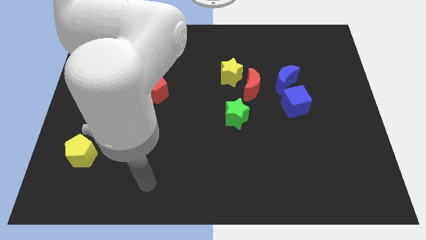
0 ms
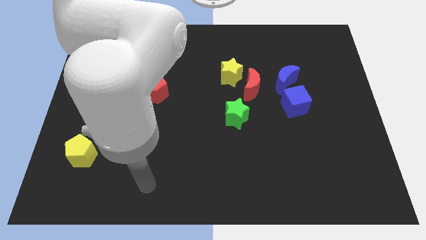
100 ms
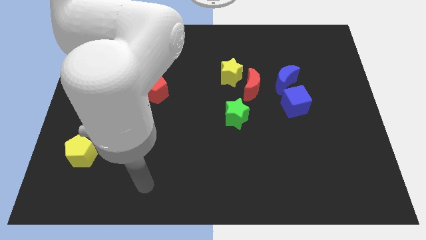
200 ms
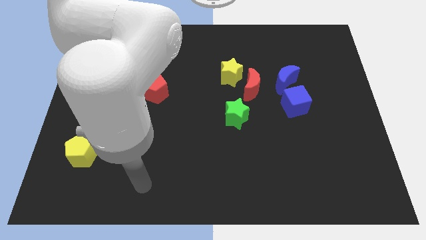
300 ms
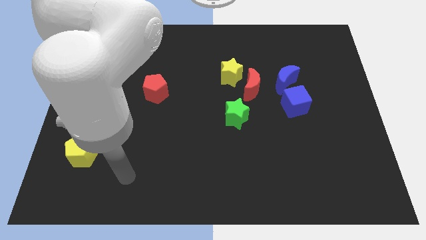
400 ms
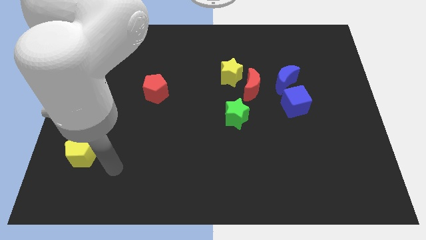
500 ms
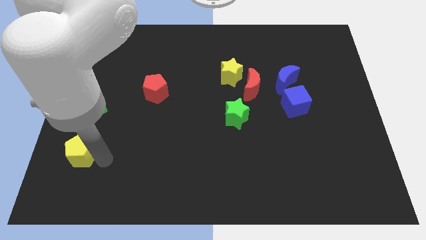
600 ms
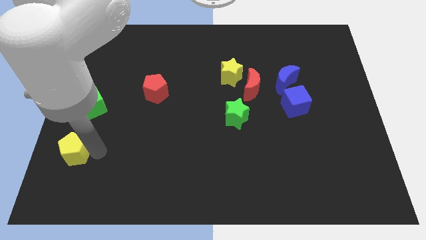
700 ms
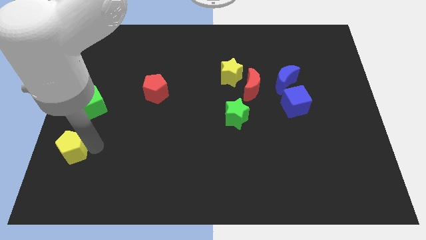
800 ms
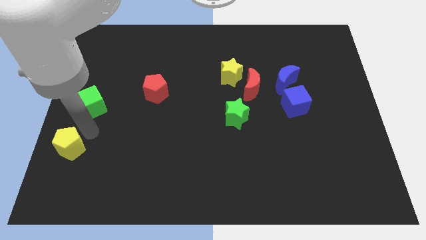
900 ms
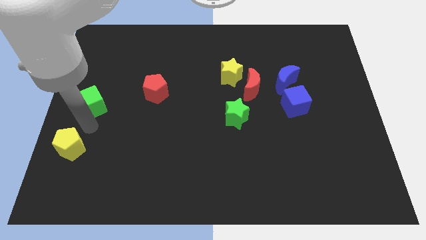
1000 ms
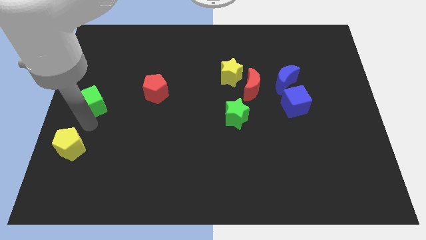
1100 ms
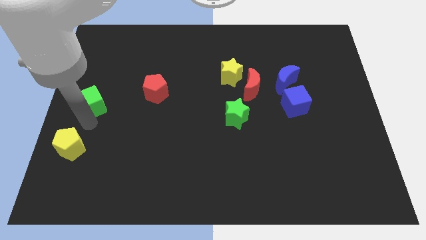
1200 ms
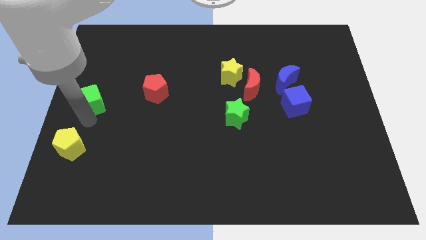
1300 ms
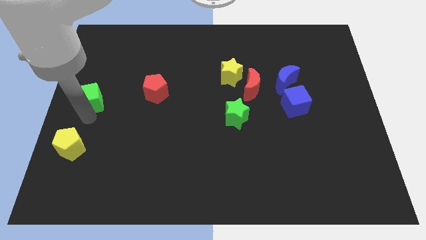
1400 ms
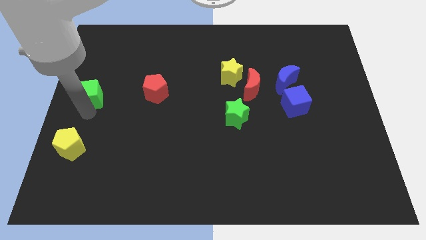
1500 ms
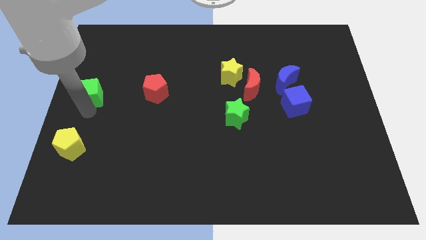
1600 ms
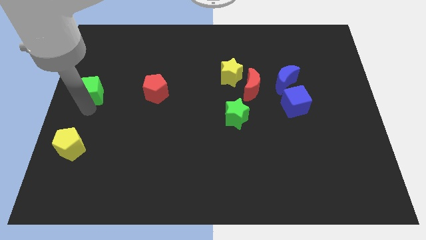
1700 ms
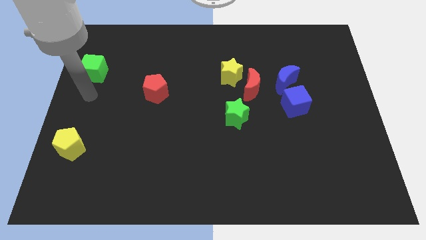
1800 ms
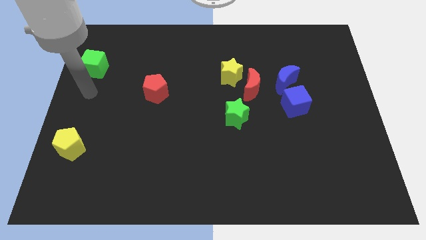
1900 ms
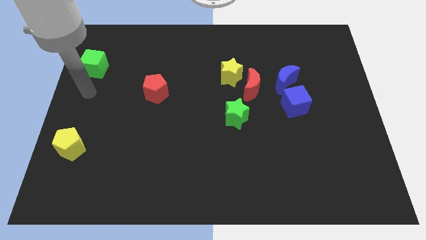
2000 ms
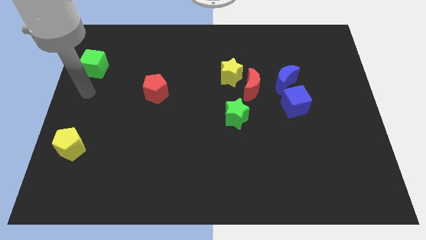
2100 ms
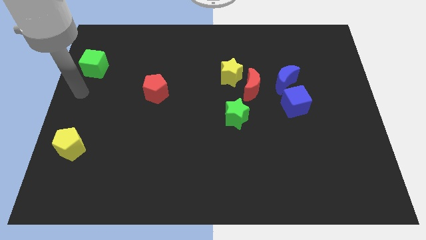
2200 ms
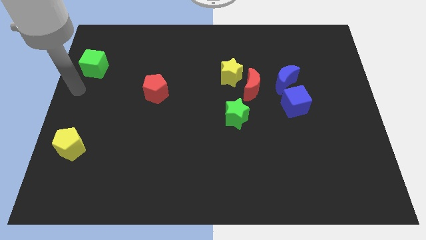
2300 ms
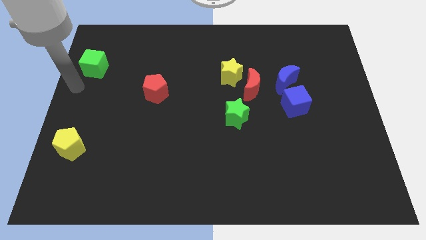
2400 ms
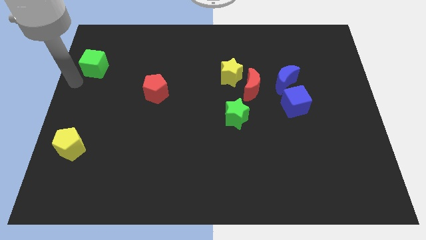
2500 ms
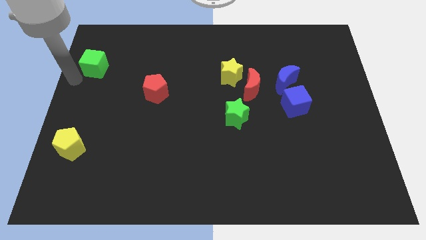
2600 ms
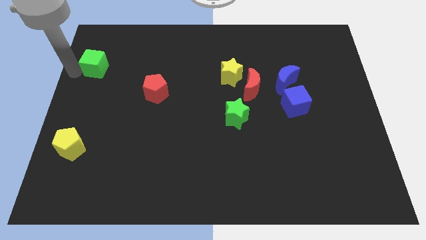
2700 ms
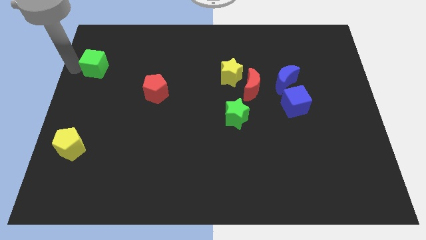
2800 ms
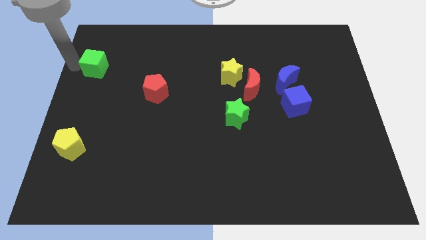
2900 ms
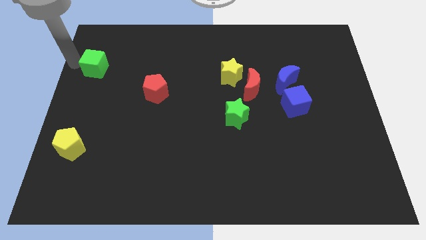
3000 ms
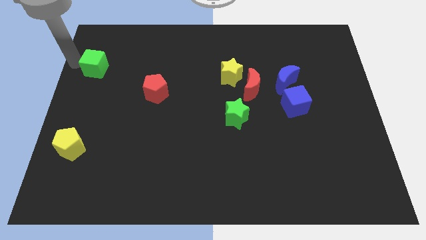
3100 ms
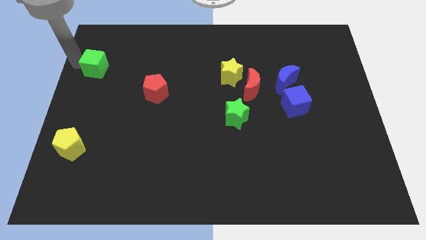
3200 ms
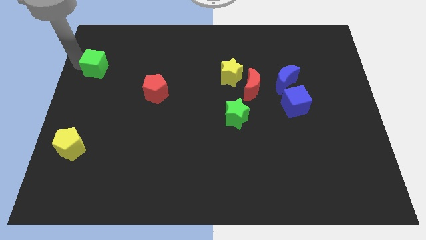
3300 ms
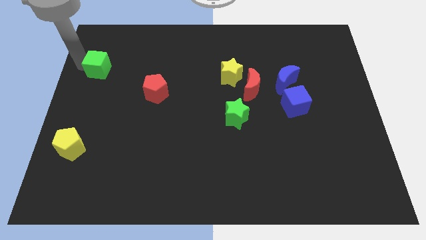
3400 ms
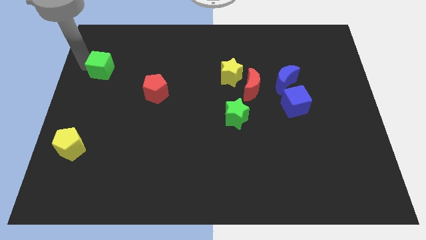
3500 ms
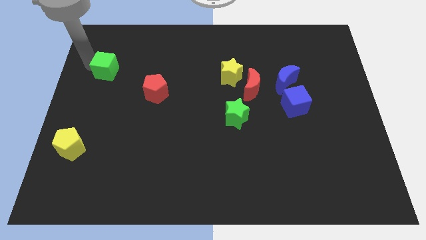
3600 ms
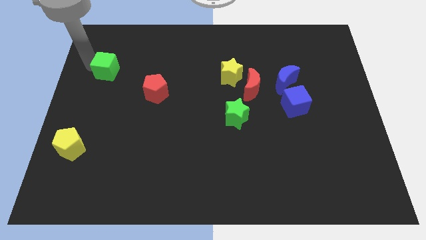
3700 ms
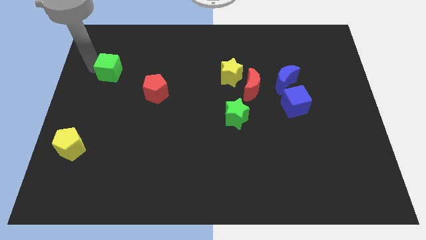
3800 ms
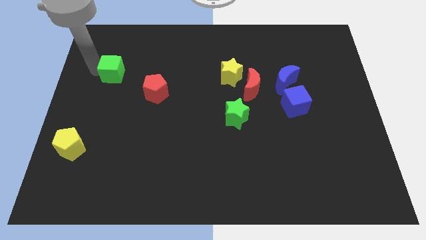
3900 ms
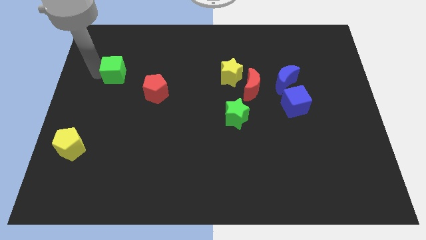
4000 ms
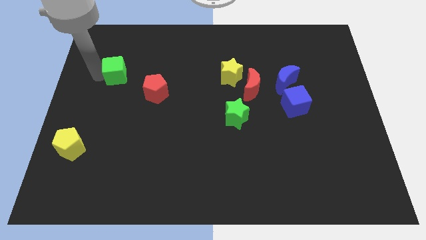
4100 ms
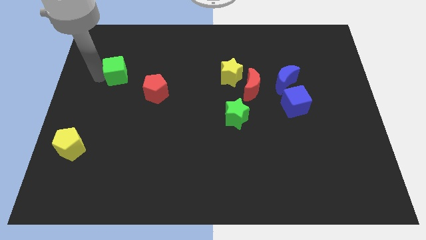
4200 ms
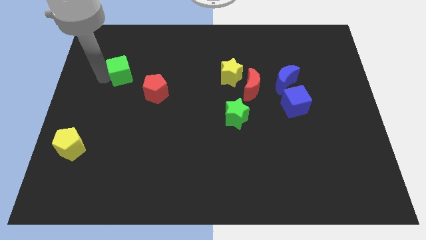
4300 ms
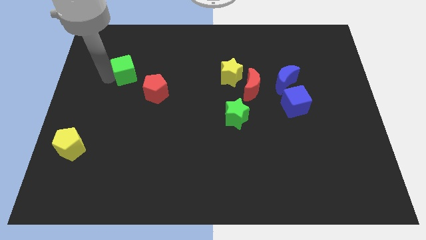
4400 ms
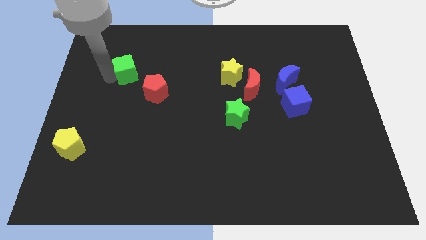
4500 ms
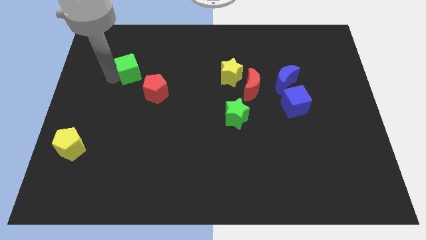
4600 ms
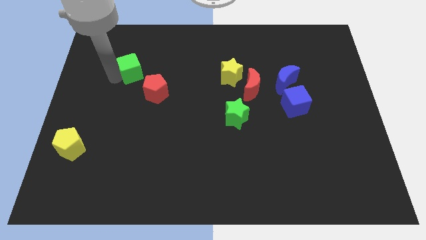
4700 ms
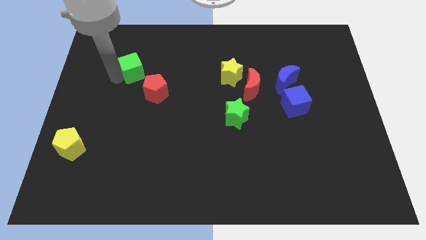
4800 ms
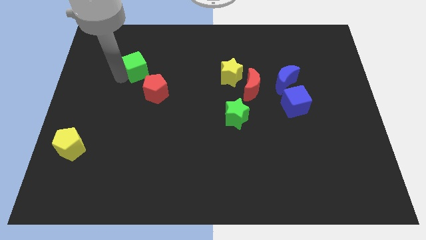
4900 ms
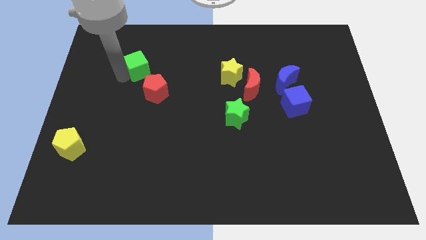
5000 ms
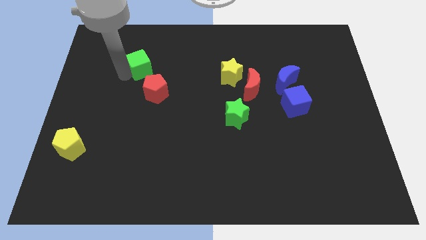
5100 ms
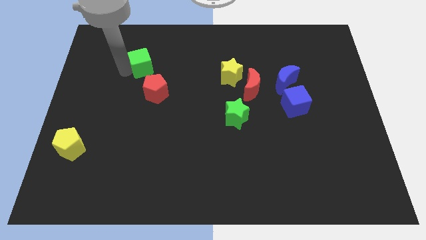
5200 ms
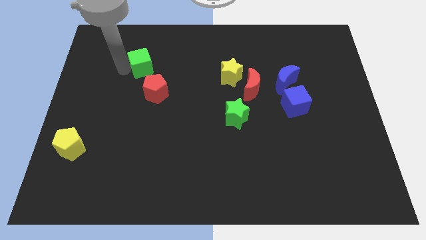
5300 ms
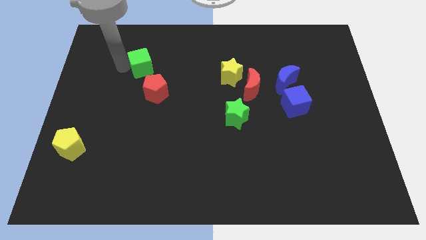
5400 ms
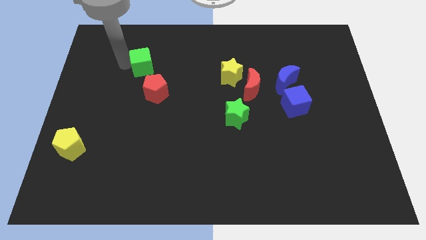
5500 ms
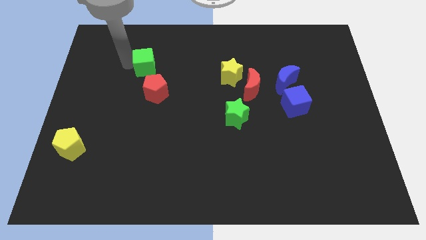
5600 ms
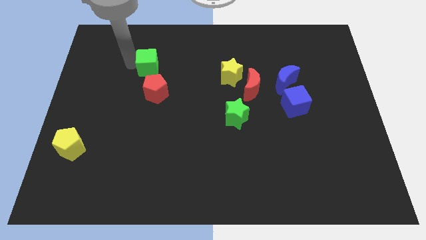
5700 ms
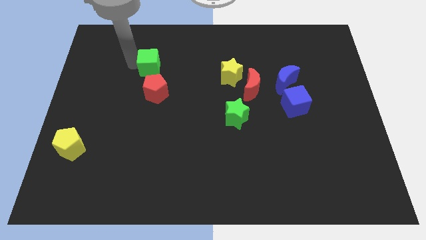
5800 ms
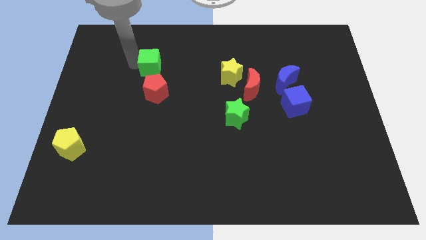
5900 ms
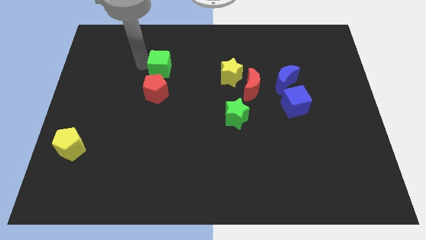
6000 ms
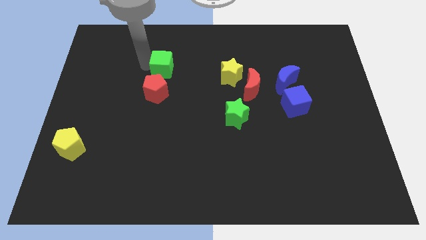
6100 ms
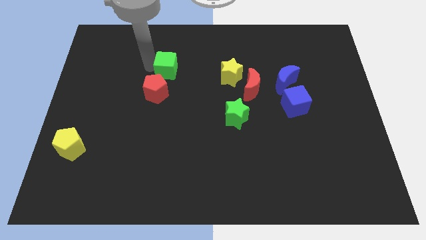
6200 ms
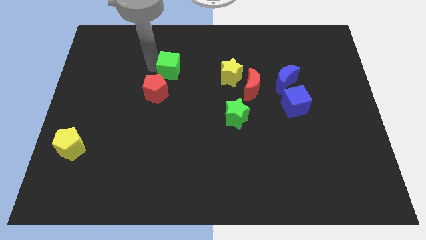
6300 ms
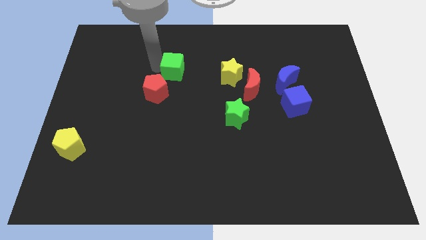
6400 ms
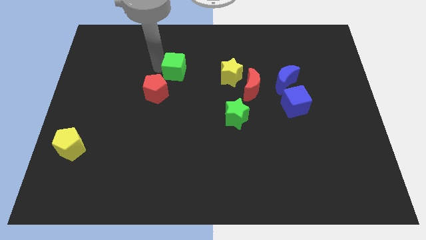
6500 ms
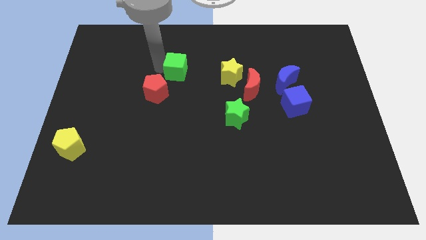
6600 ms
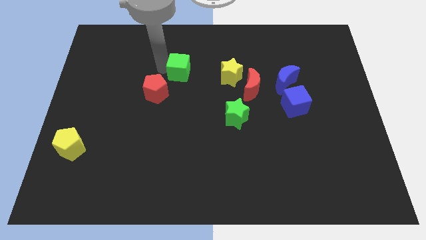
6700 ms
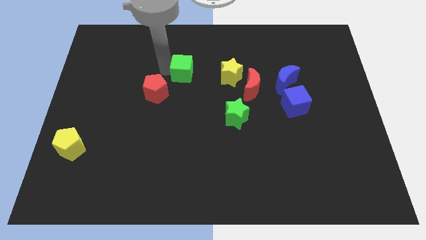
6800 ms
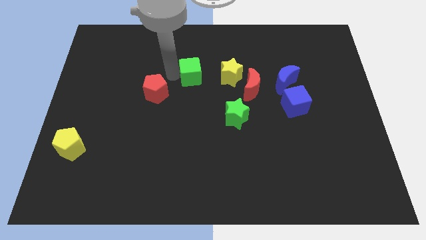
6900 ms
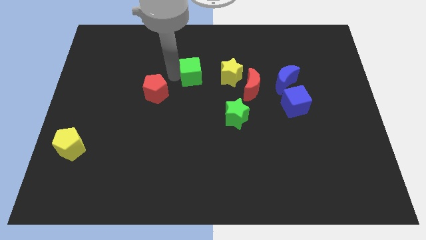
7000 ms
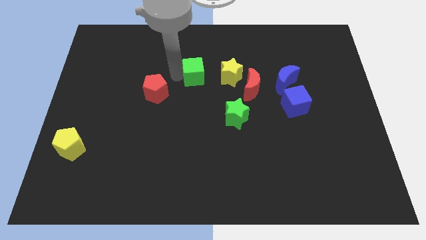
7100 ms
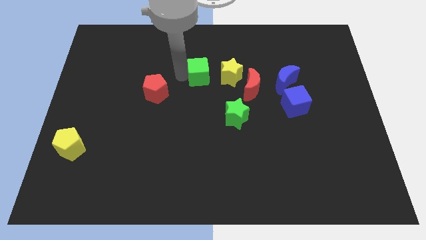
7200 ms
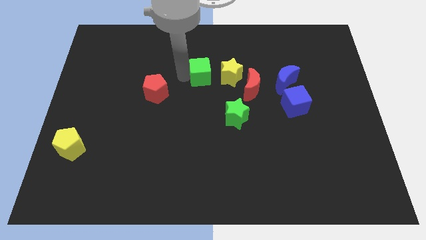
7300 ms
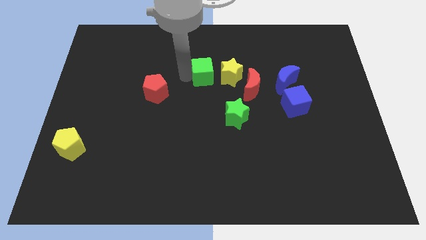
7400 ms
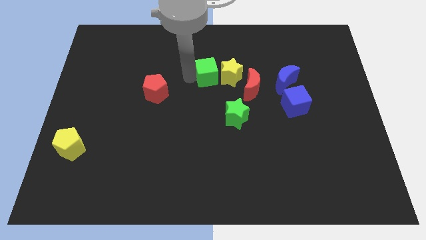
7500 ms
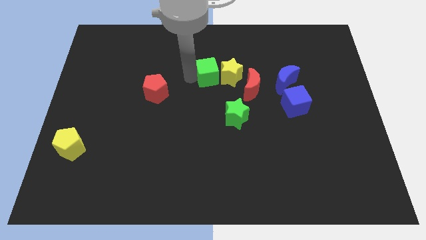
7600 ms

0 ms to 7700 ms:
move the green cube next to the yellow star

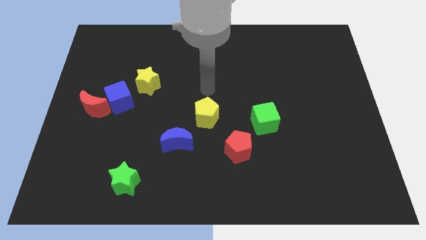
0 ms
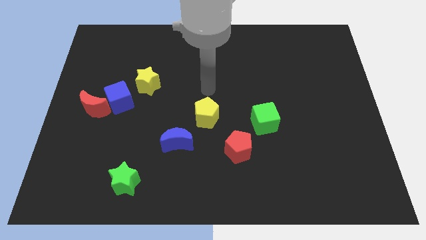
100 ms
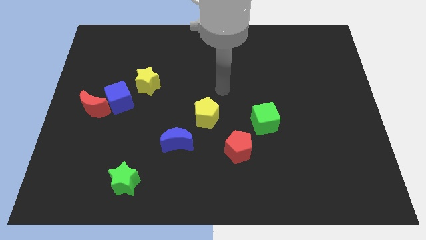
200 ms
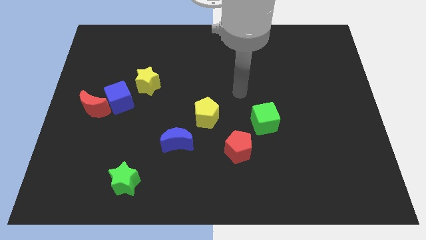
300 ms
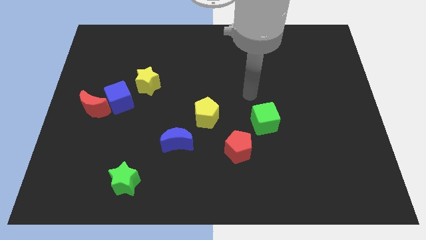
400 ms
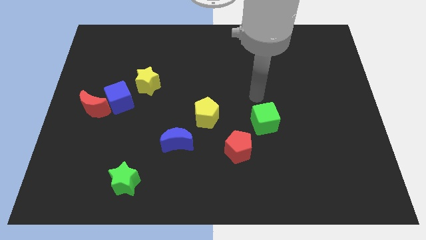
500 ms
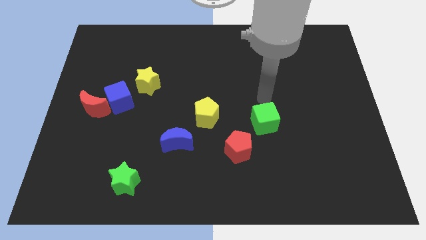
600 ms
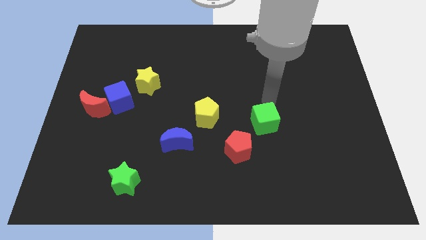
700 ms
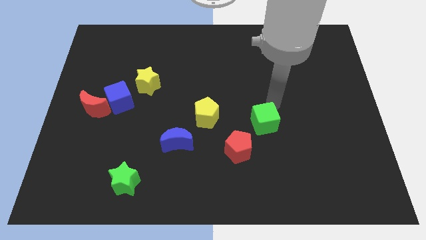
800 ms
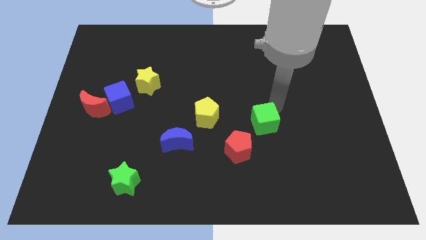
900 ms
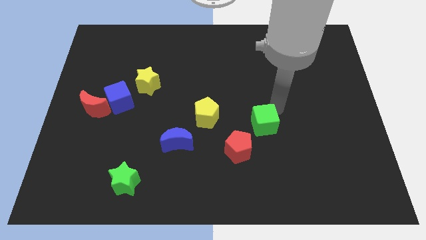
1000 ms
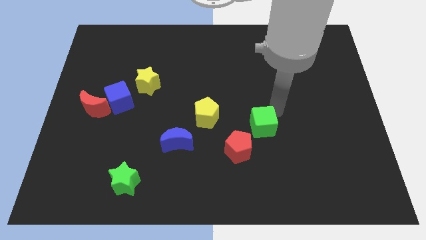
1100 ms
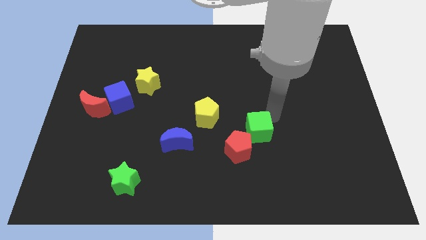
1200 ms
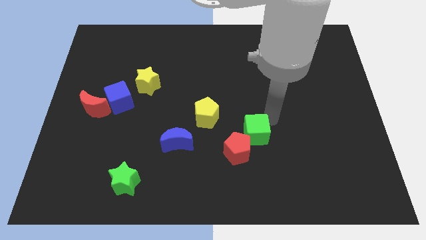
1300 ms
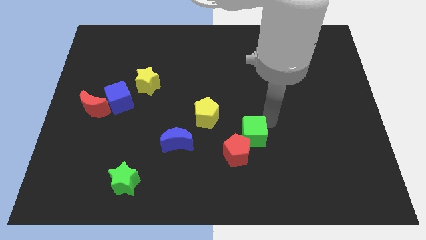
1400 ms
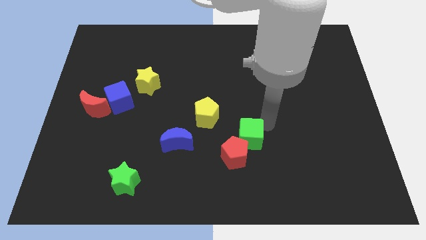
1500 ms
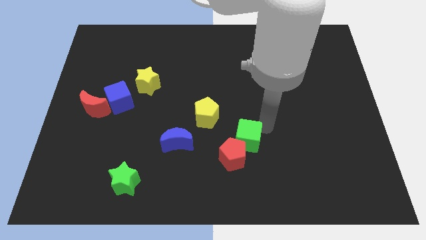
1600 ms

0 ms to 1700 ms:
slide the green cube close to the red pentagon
